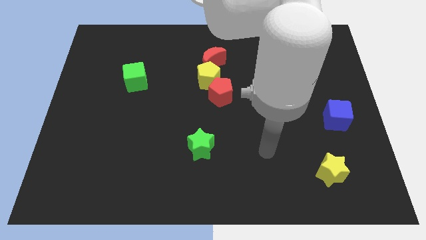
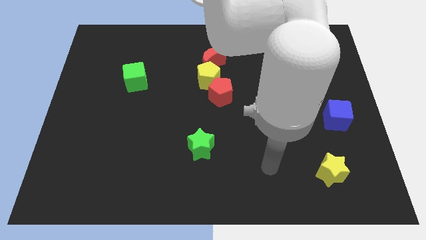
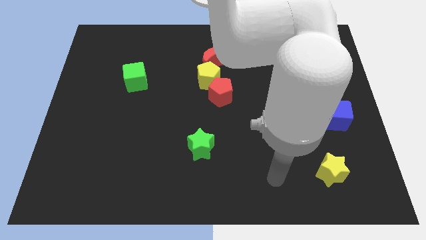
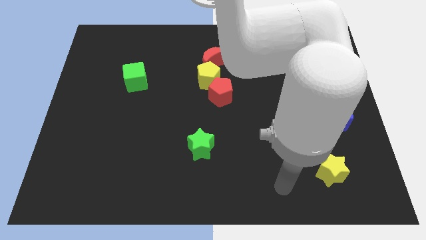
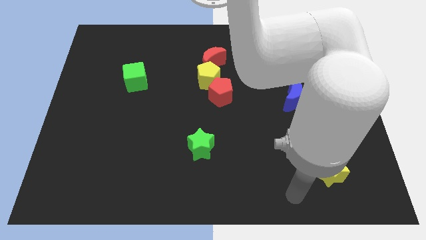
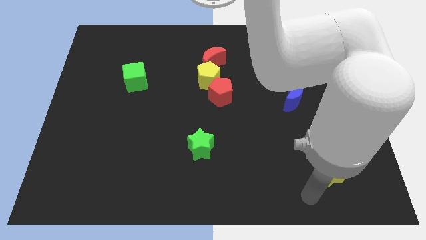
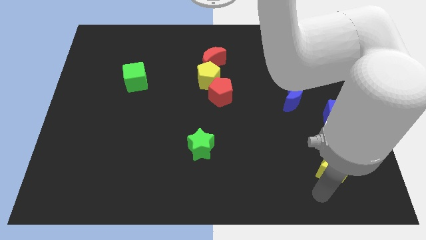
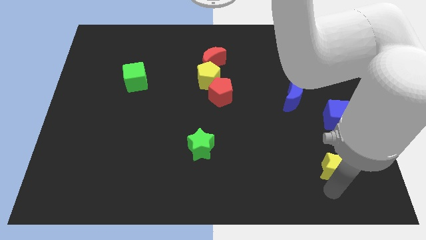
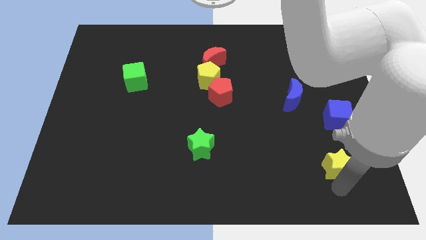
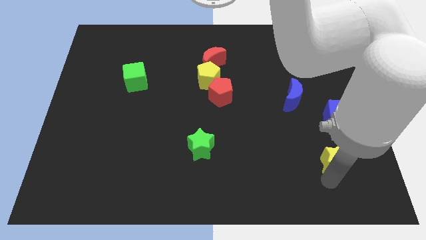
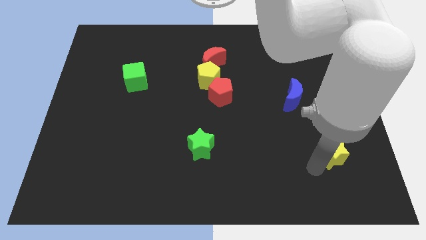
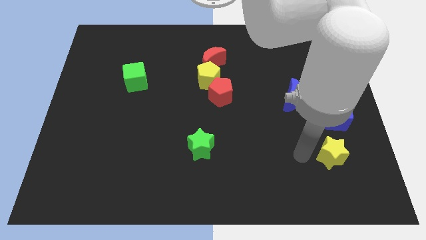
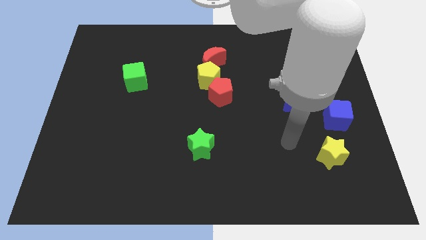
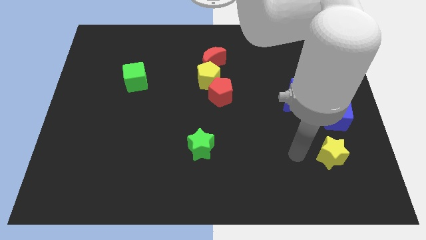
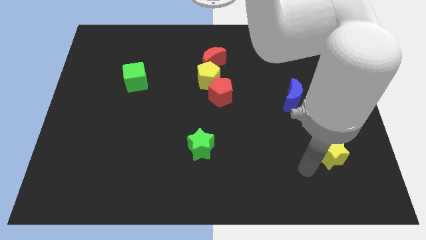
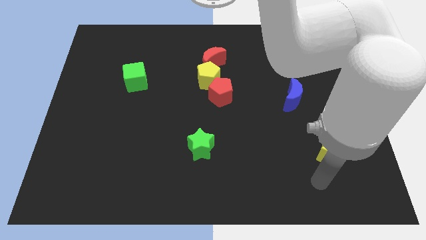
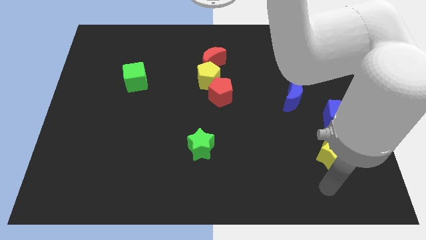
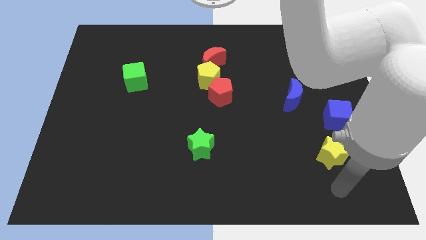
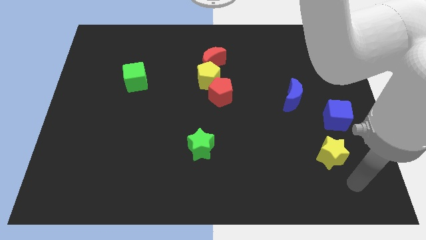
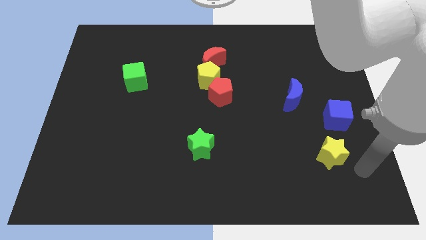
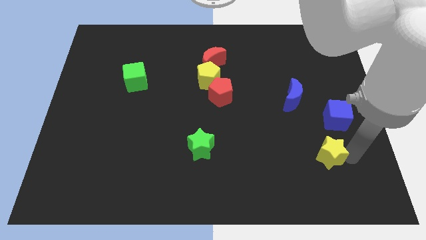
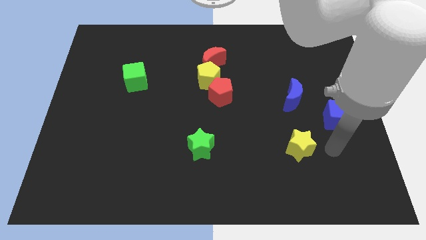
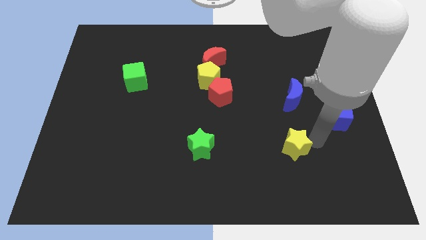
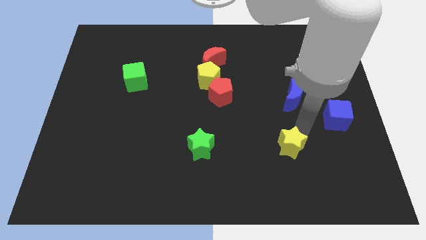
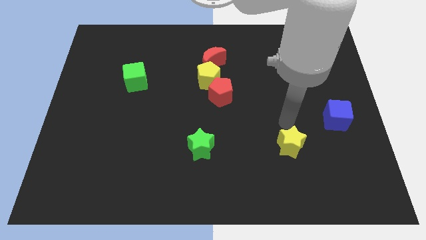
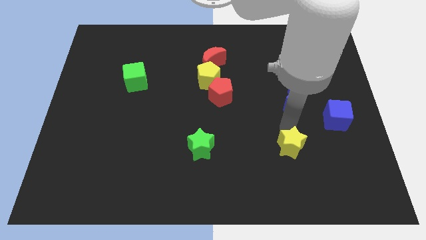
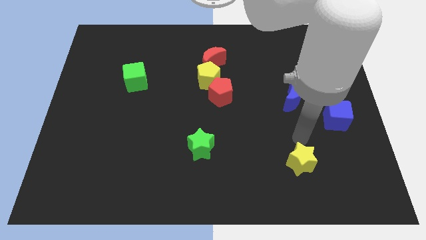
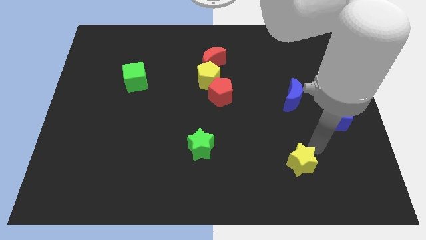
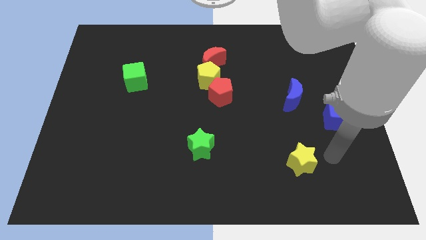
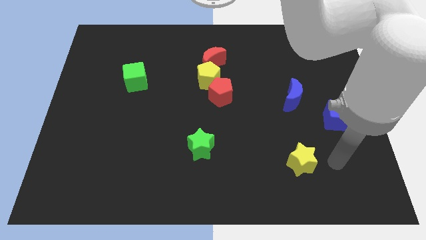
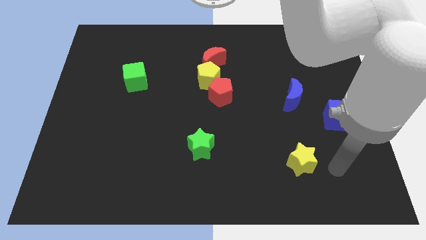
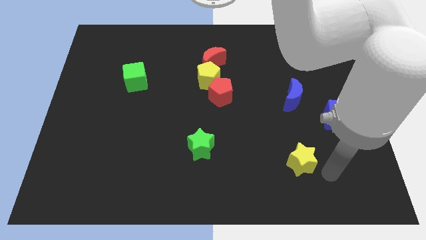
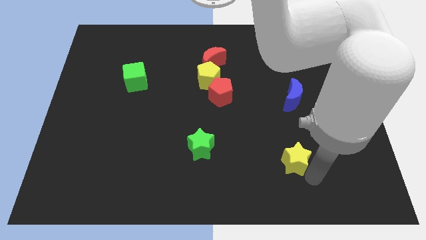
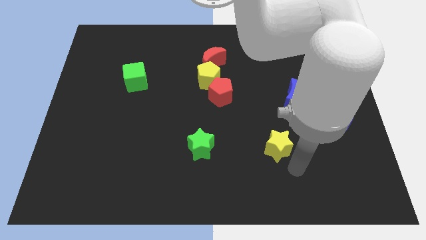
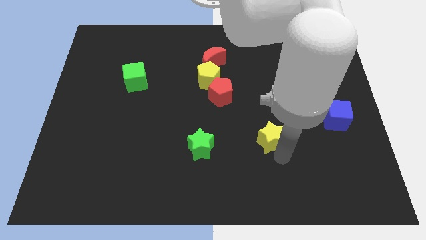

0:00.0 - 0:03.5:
push the yellow star parallel to the green star

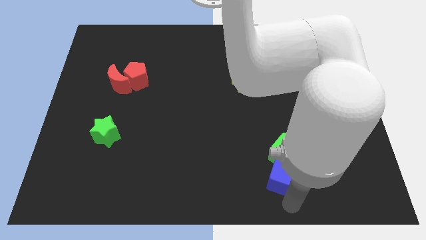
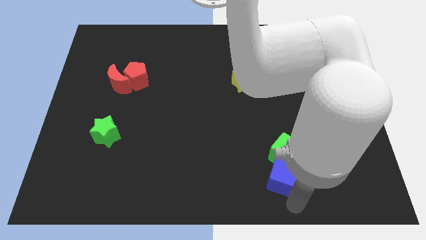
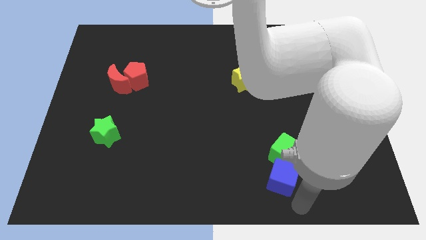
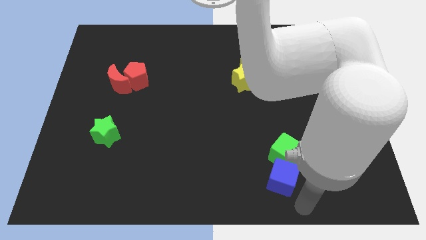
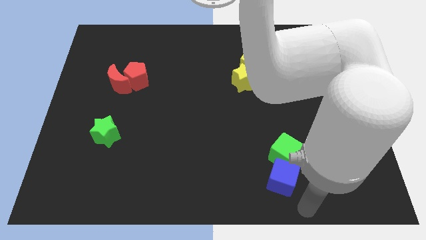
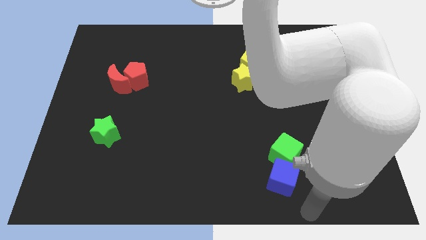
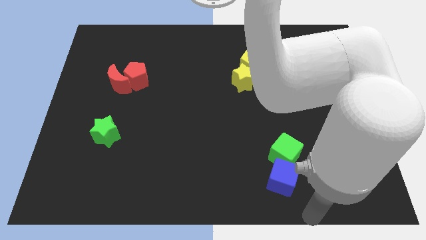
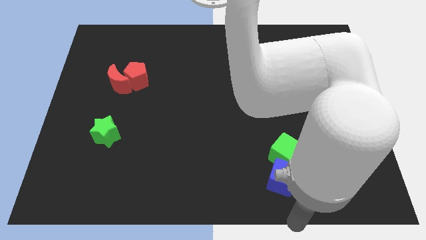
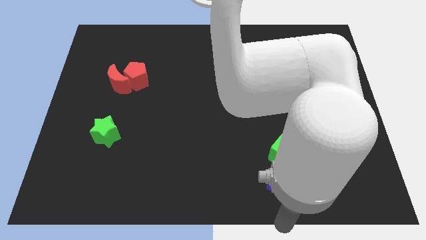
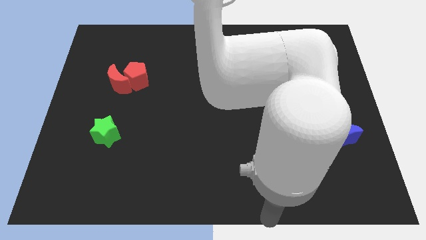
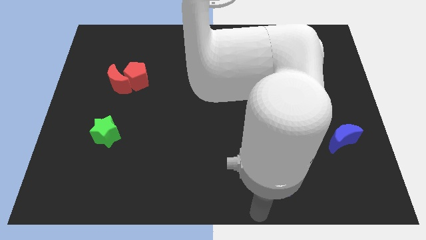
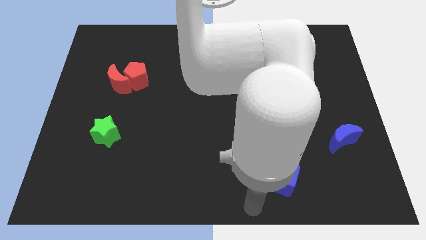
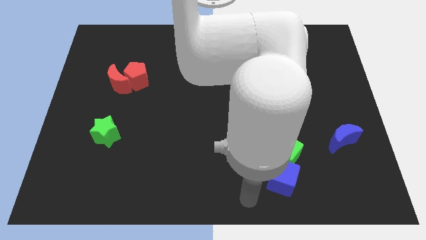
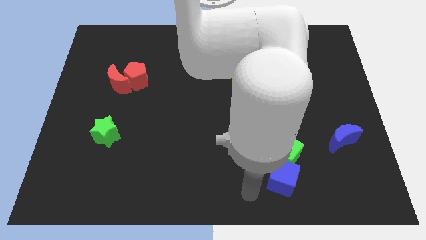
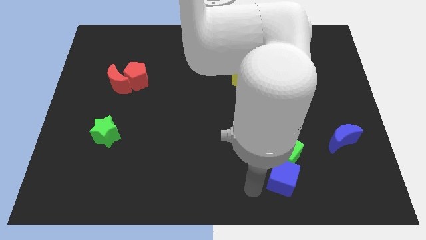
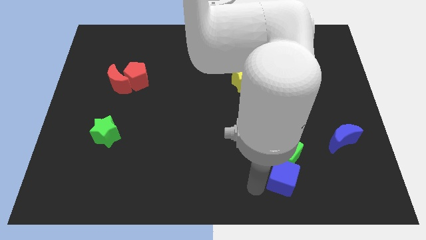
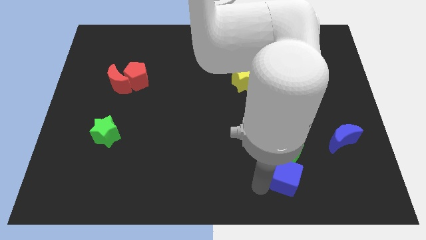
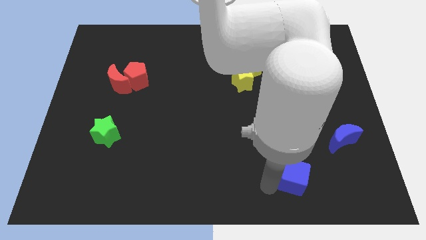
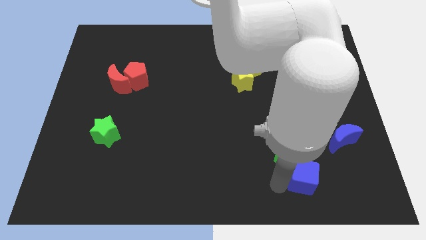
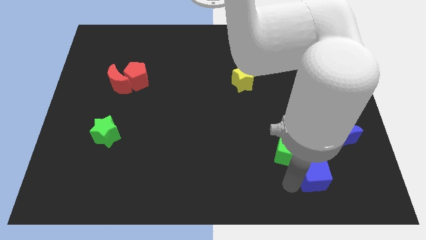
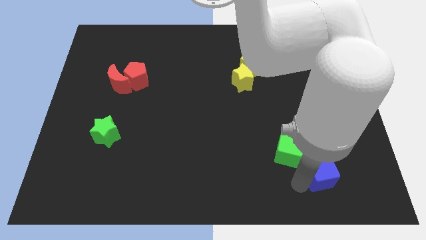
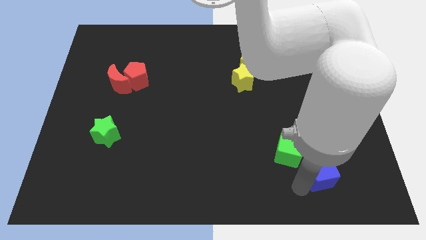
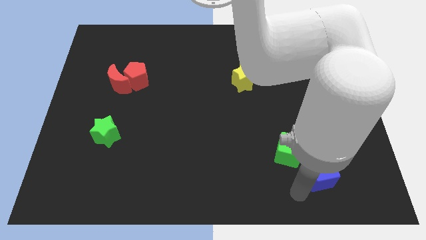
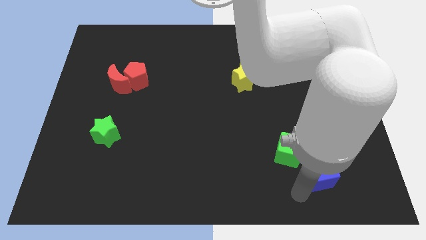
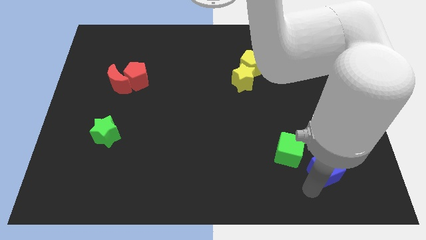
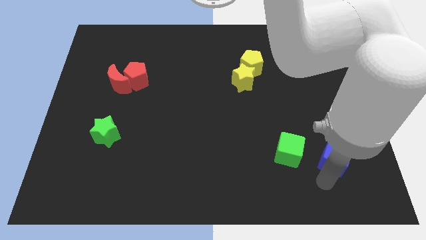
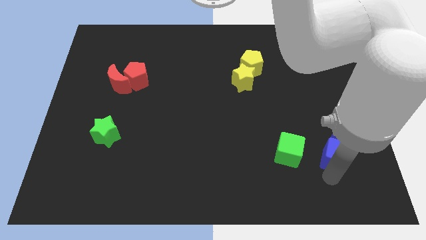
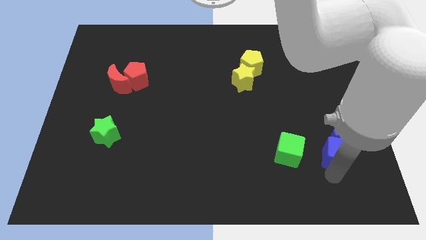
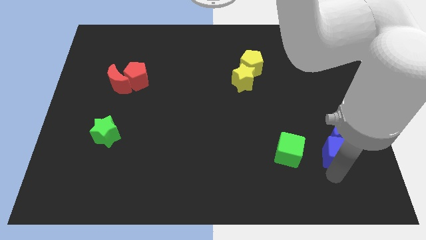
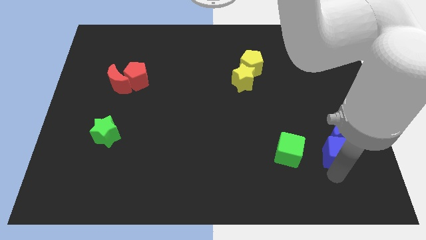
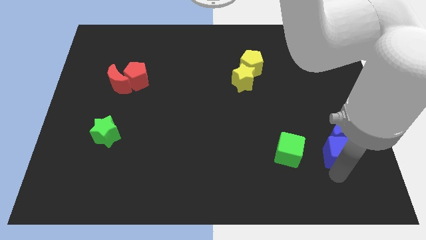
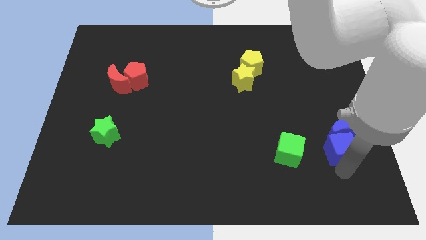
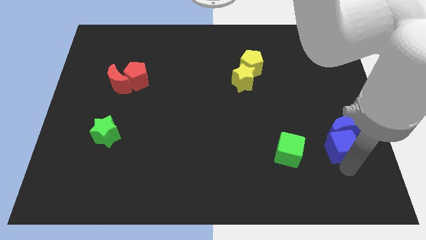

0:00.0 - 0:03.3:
slide the blue cube into the bottom side of the blue moon

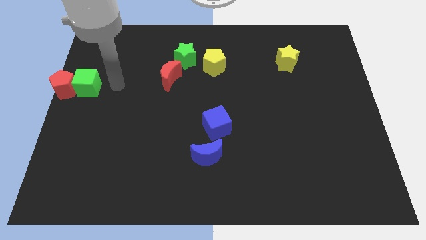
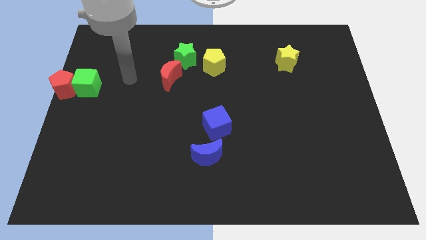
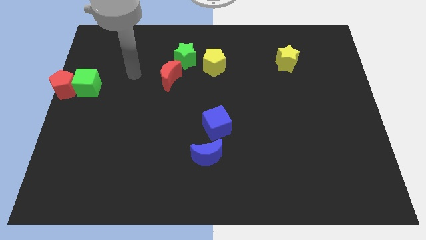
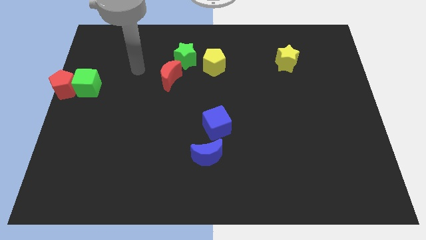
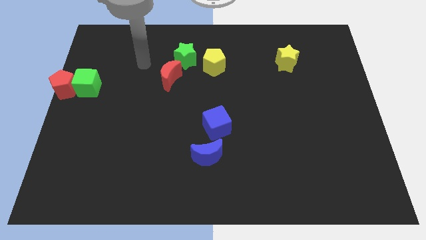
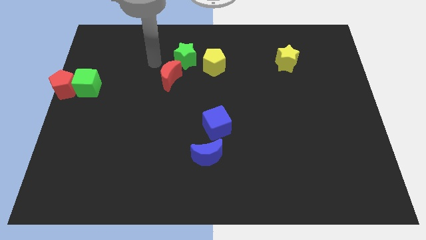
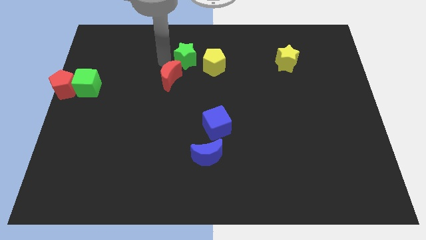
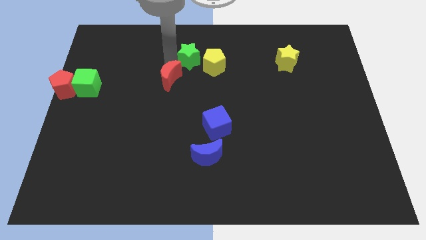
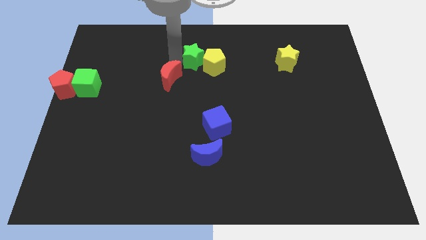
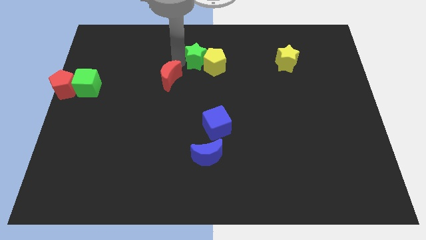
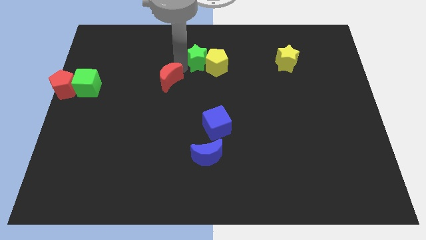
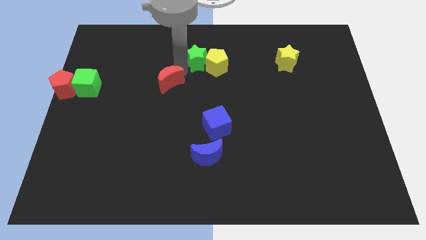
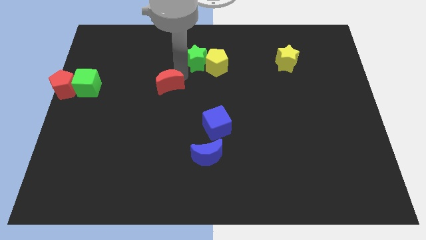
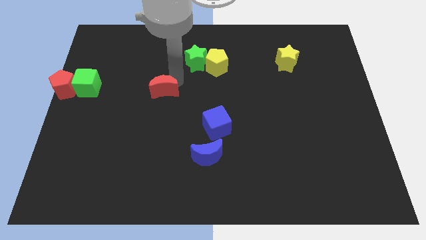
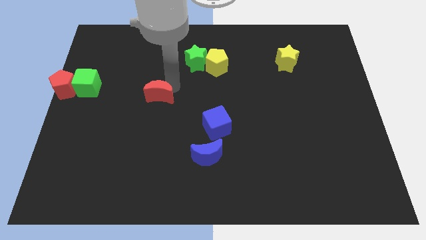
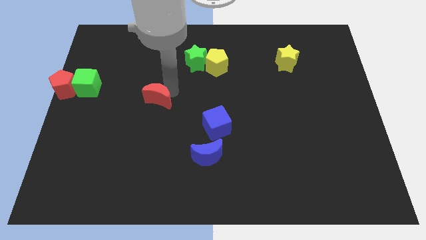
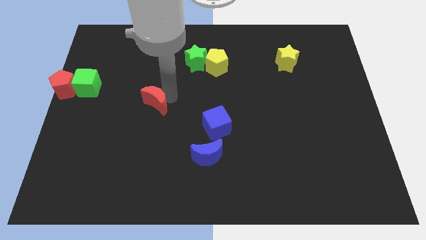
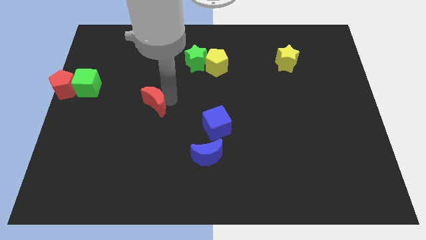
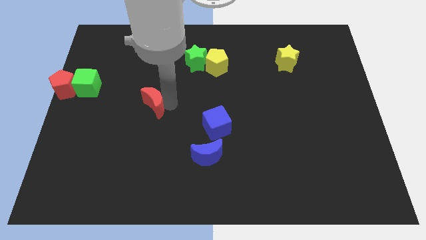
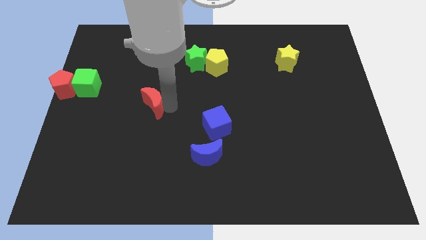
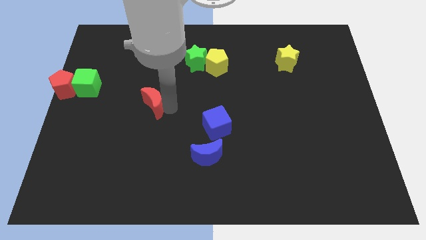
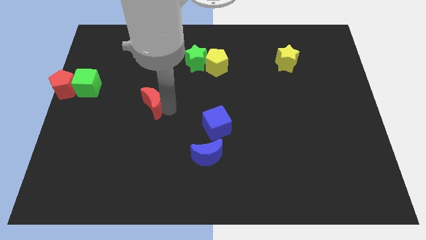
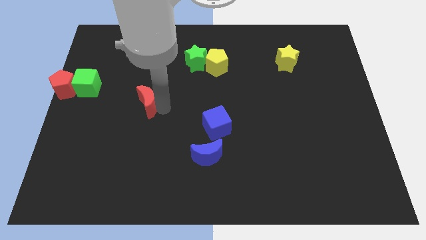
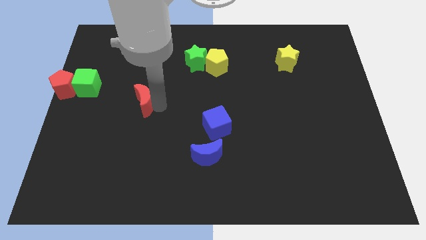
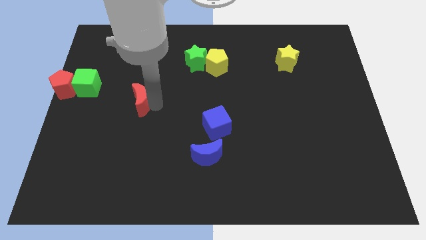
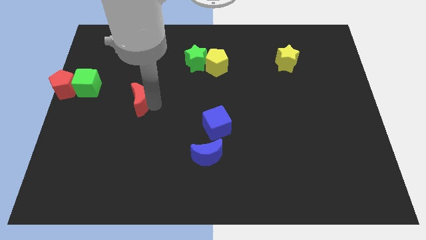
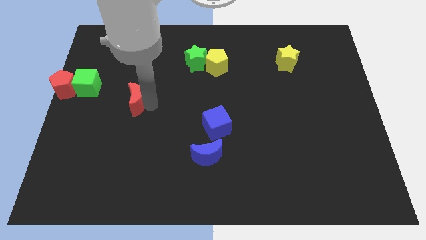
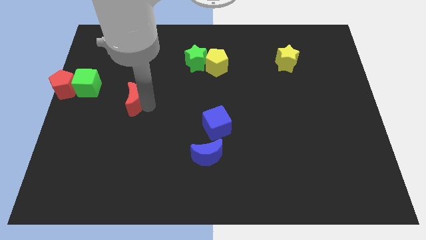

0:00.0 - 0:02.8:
place the red crescent diagonally on the bottom right side of the green cube
